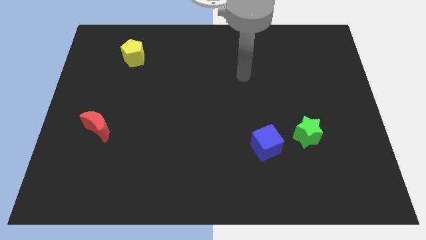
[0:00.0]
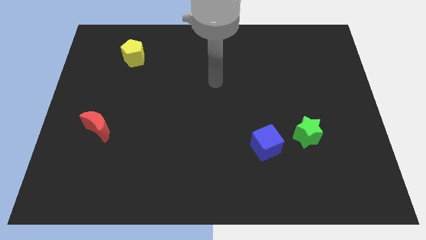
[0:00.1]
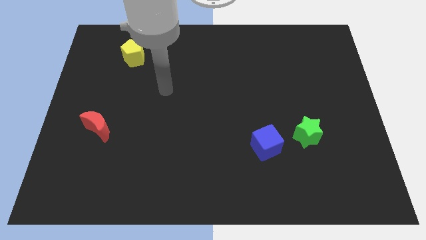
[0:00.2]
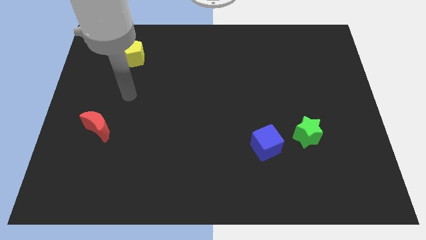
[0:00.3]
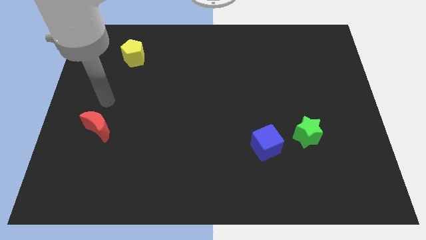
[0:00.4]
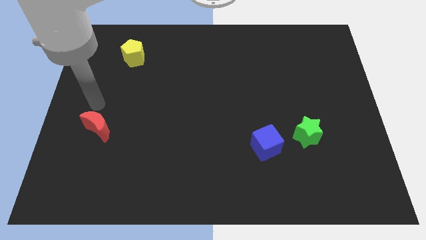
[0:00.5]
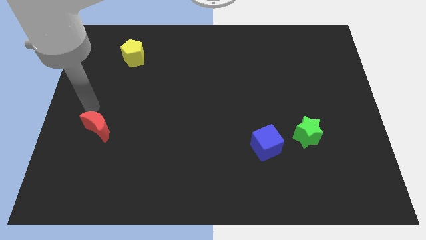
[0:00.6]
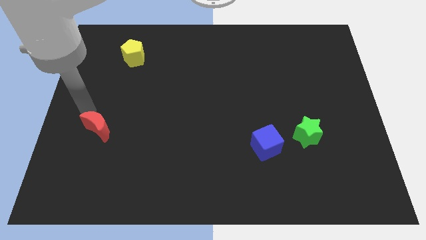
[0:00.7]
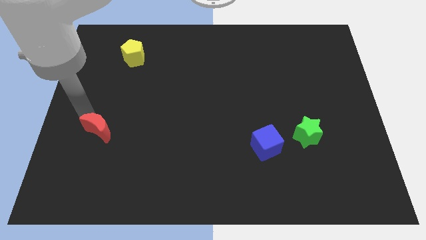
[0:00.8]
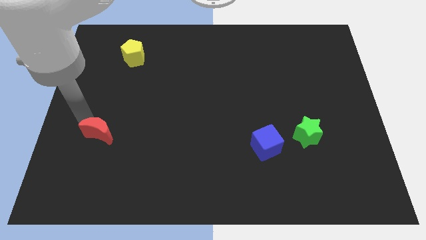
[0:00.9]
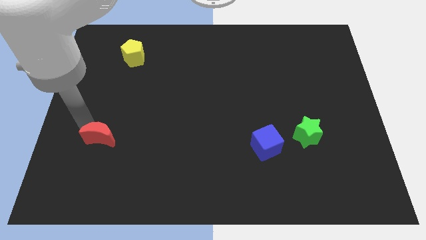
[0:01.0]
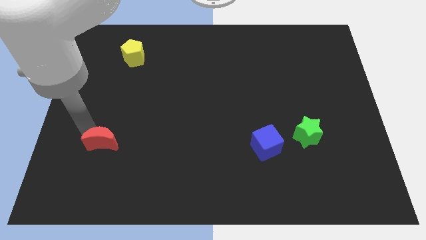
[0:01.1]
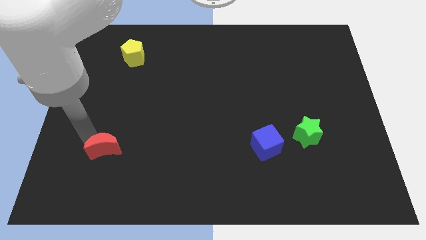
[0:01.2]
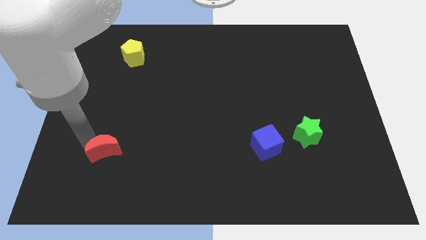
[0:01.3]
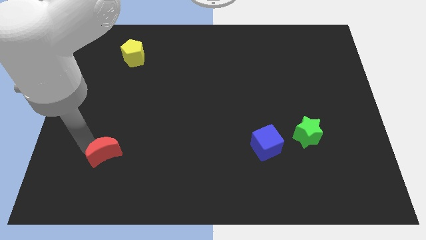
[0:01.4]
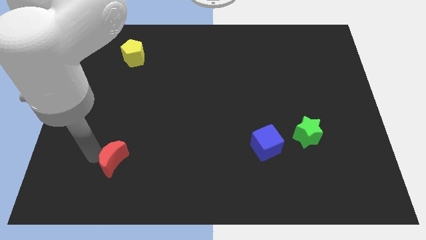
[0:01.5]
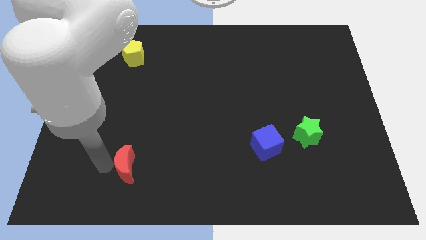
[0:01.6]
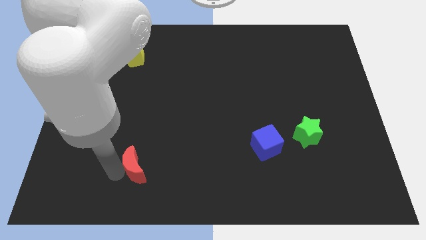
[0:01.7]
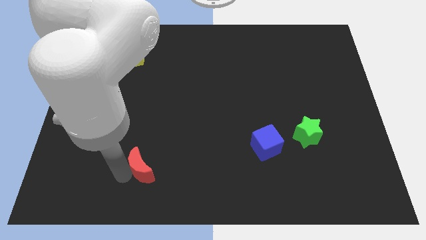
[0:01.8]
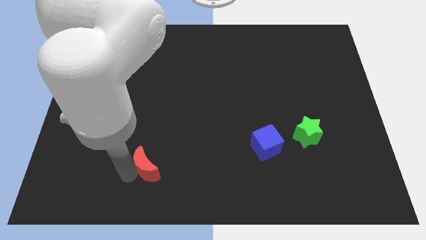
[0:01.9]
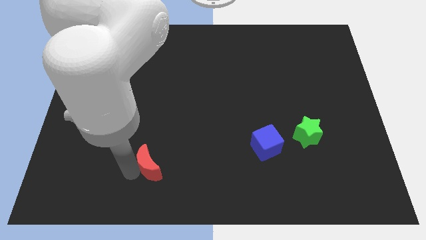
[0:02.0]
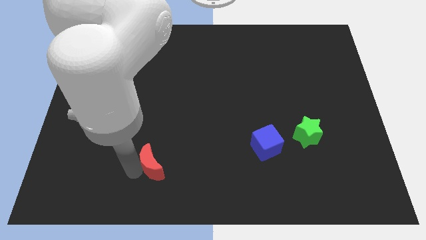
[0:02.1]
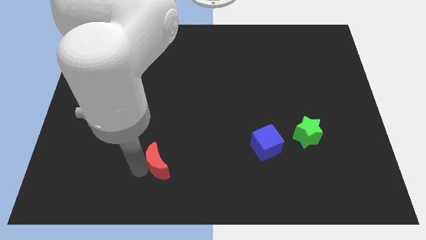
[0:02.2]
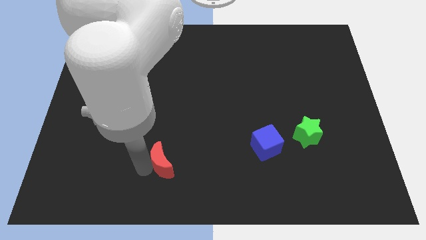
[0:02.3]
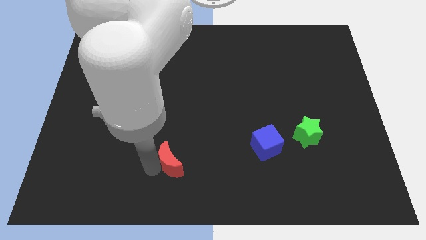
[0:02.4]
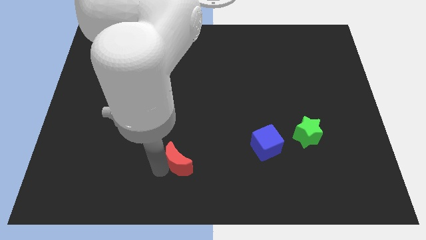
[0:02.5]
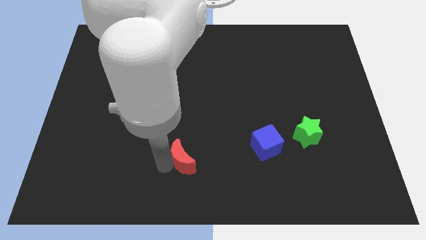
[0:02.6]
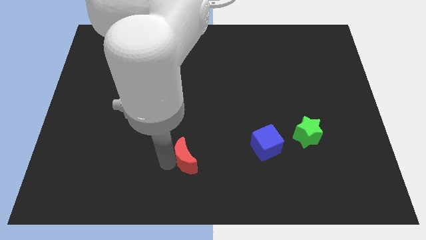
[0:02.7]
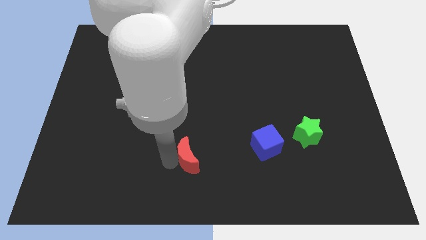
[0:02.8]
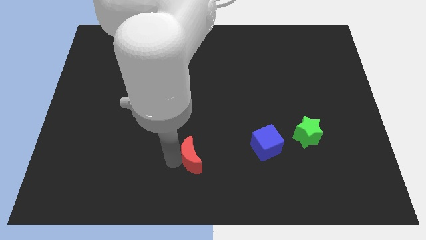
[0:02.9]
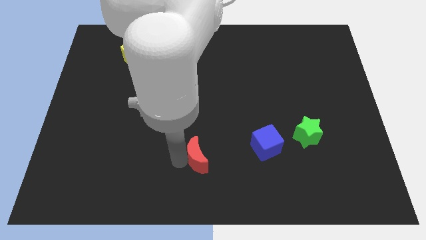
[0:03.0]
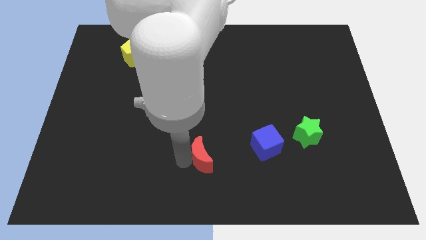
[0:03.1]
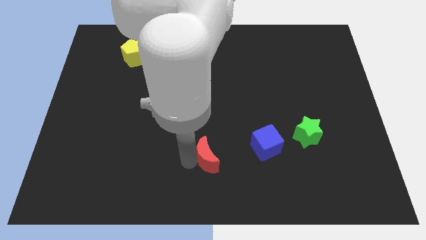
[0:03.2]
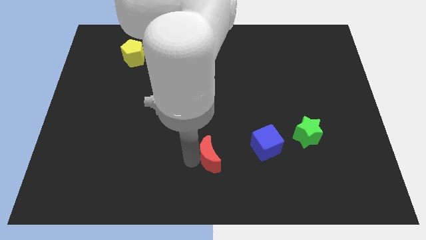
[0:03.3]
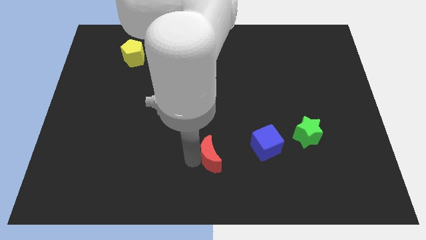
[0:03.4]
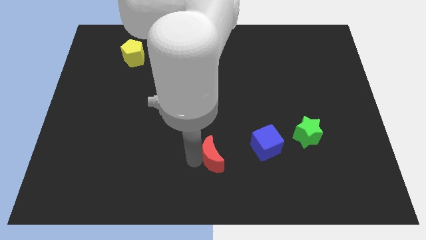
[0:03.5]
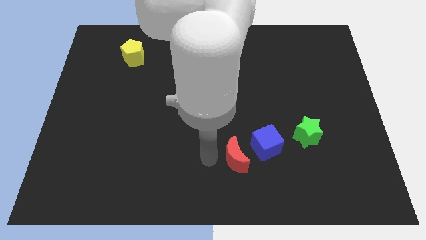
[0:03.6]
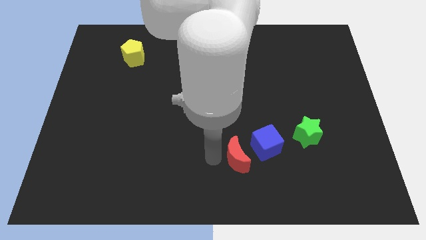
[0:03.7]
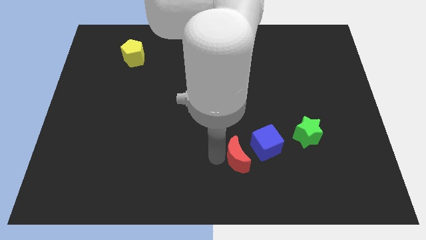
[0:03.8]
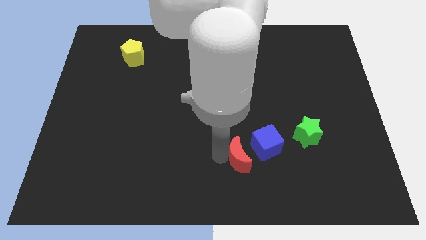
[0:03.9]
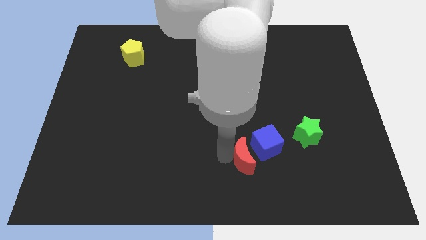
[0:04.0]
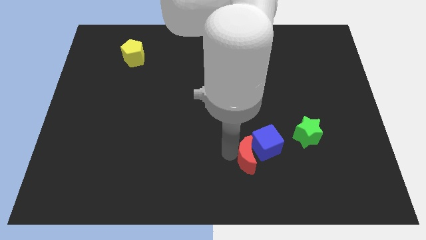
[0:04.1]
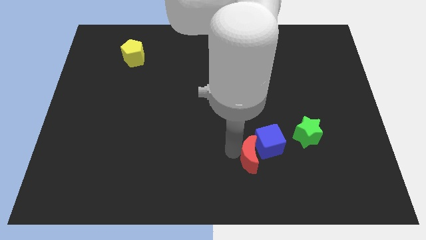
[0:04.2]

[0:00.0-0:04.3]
move the moon towards the blue block

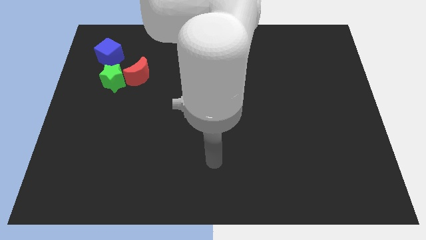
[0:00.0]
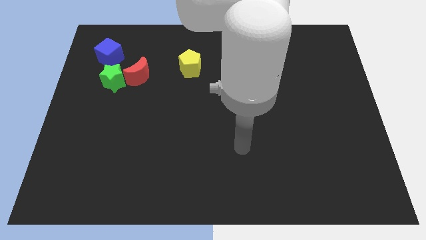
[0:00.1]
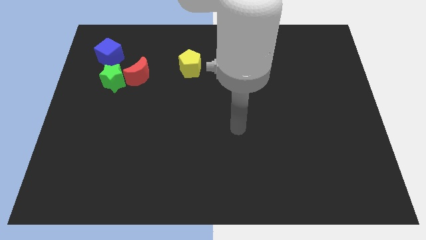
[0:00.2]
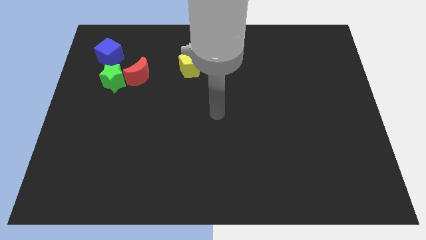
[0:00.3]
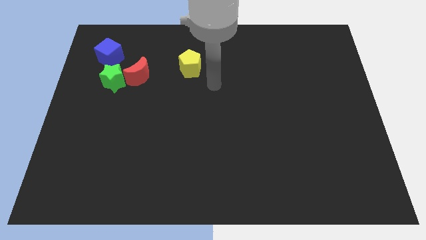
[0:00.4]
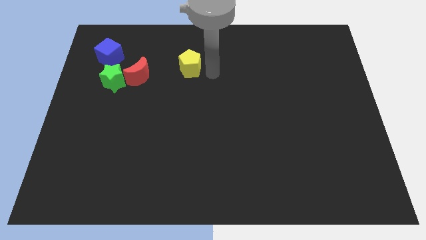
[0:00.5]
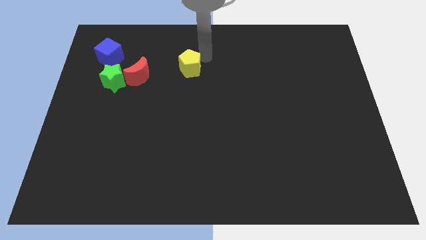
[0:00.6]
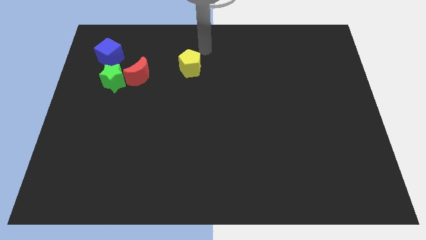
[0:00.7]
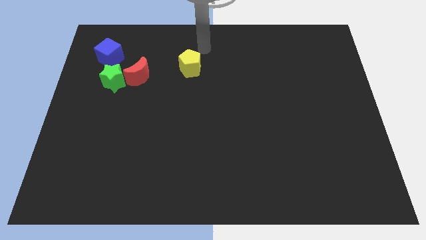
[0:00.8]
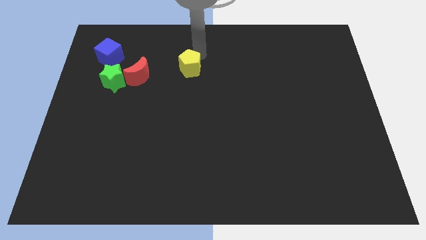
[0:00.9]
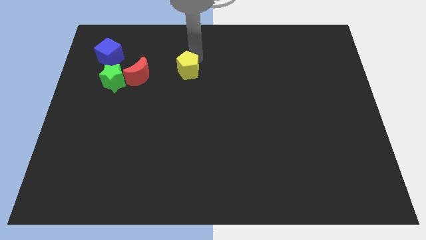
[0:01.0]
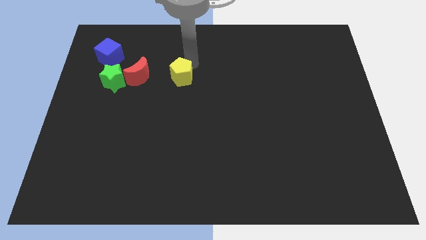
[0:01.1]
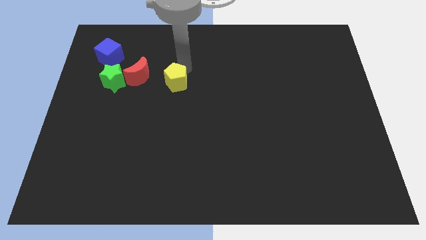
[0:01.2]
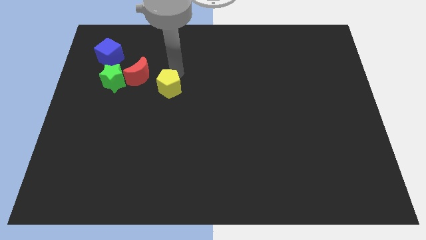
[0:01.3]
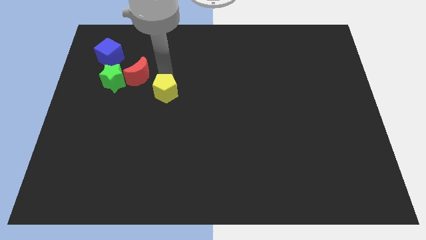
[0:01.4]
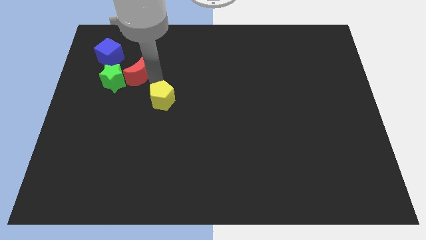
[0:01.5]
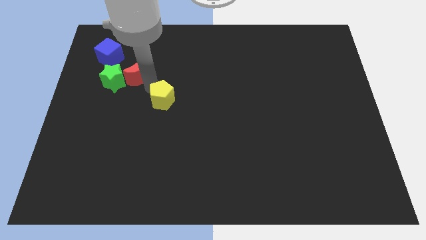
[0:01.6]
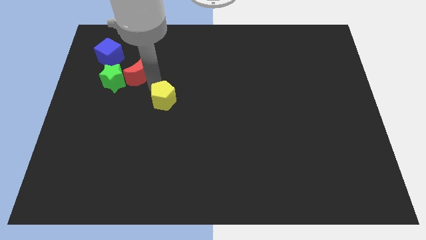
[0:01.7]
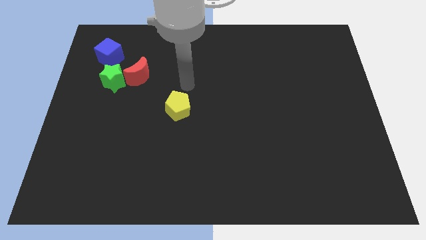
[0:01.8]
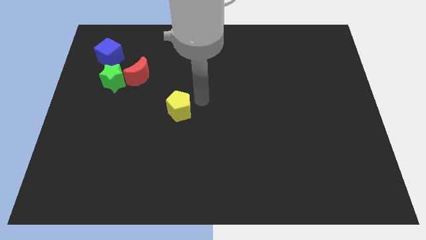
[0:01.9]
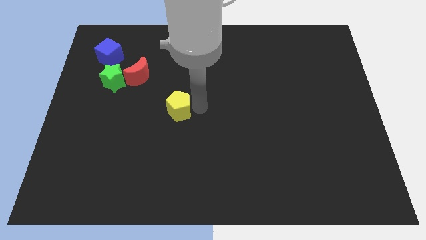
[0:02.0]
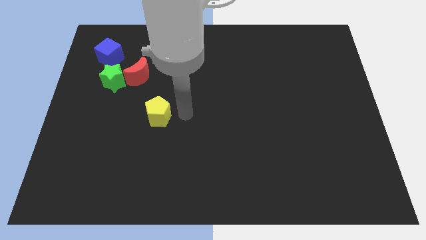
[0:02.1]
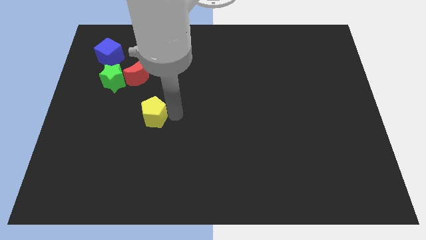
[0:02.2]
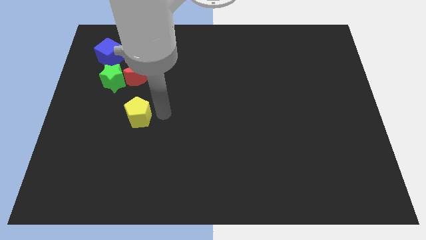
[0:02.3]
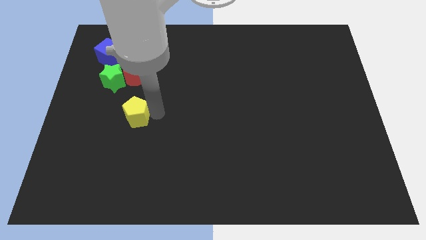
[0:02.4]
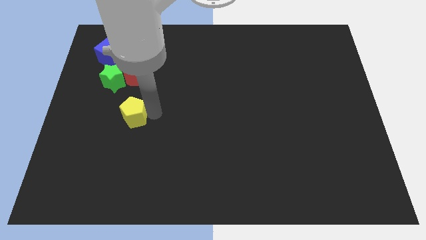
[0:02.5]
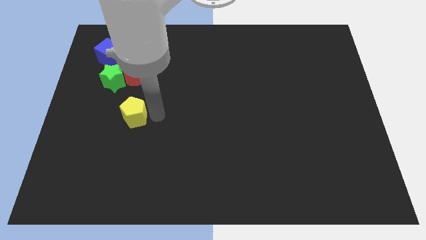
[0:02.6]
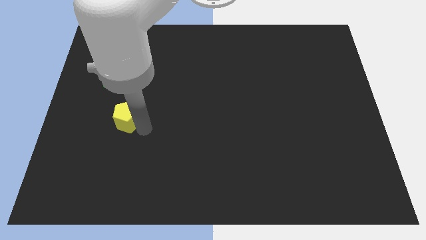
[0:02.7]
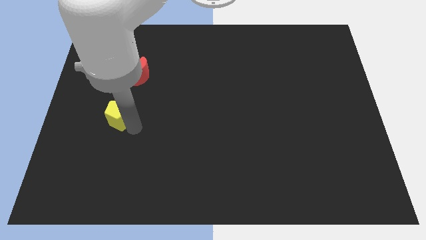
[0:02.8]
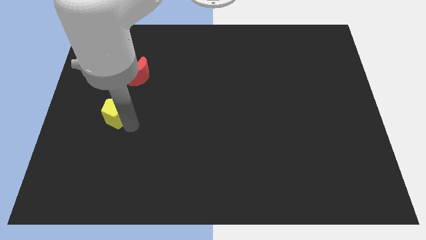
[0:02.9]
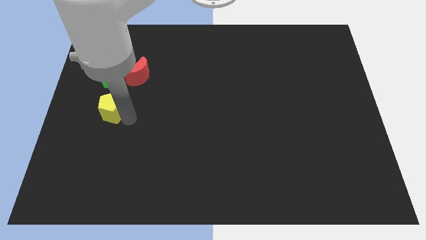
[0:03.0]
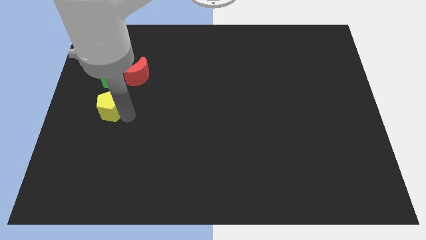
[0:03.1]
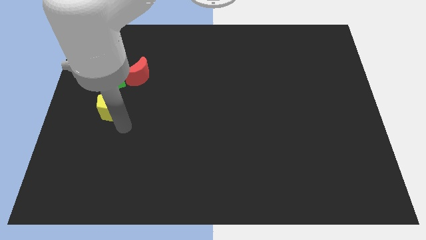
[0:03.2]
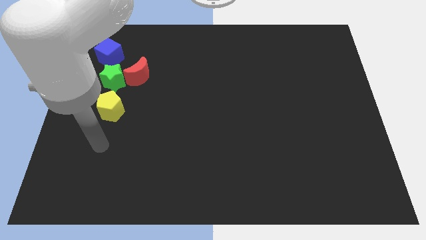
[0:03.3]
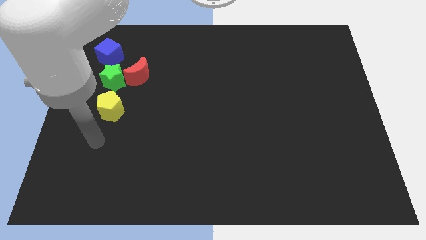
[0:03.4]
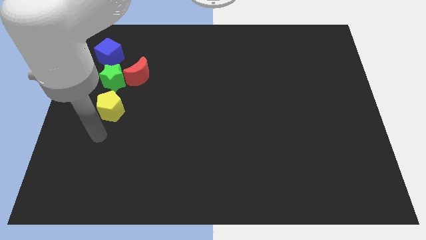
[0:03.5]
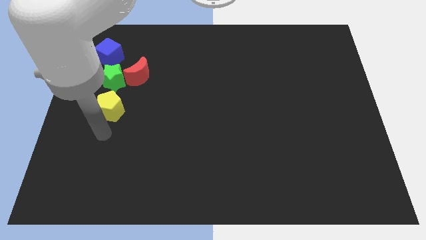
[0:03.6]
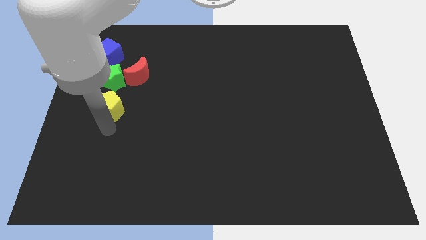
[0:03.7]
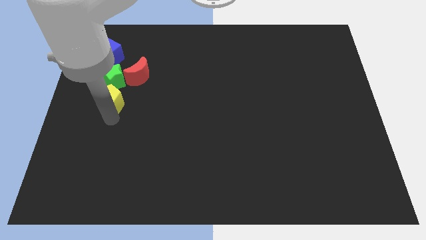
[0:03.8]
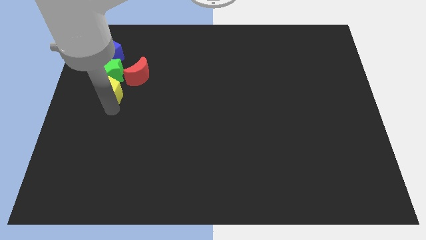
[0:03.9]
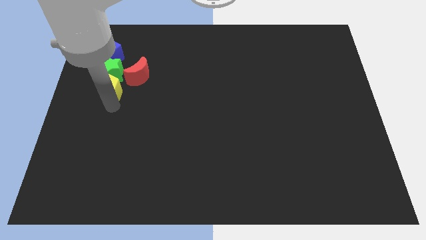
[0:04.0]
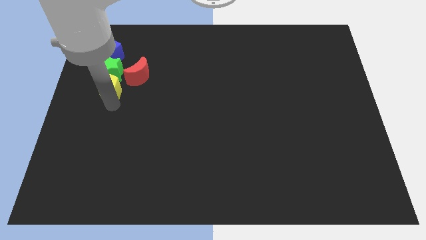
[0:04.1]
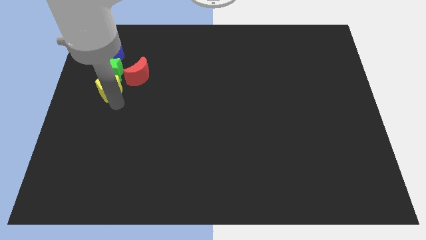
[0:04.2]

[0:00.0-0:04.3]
put the yellow pentagon next to the star

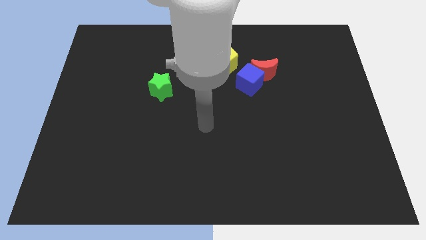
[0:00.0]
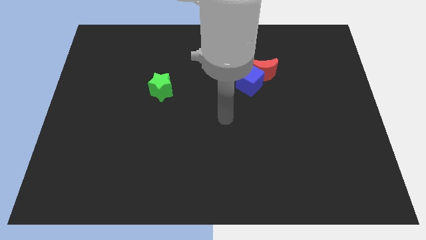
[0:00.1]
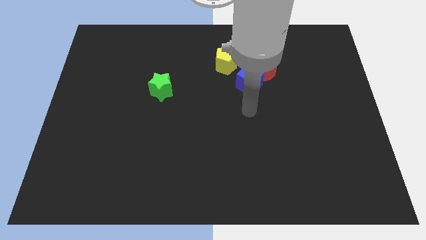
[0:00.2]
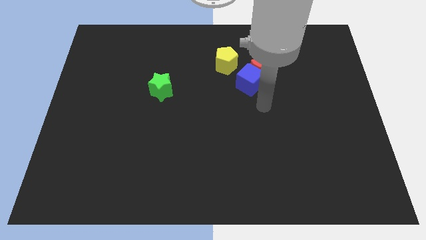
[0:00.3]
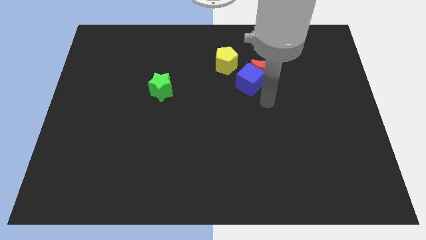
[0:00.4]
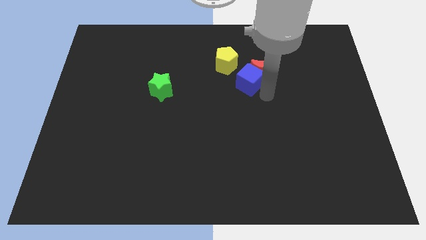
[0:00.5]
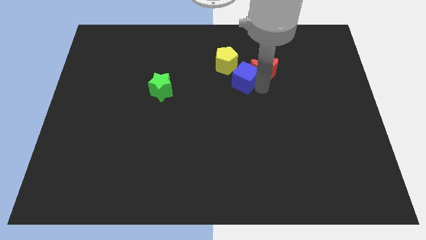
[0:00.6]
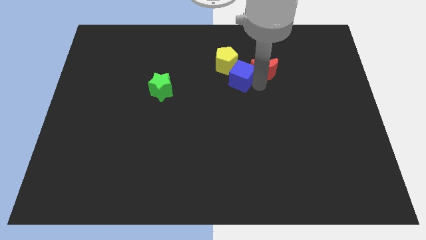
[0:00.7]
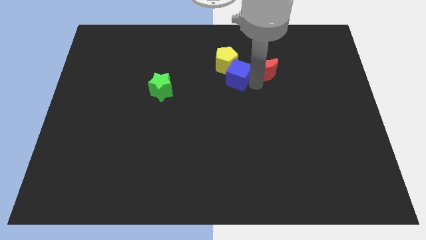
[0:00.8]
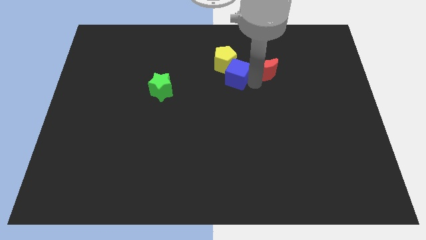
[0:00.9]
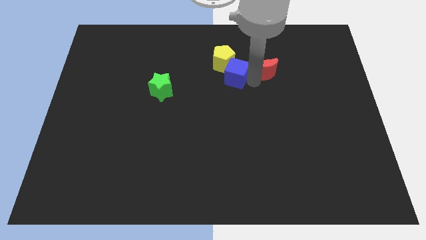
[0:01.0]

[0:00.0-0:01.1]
slide the blue block close to the yellow pentagon
